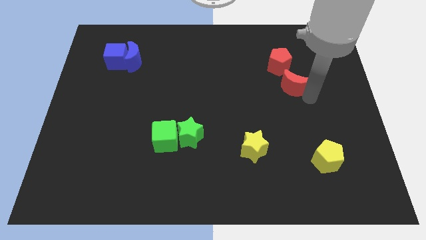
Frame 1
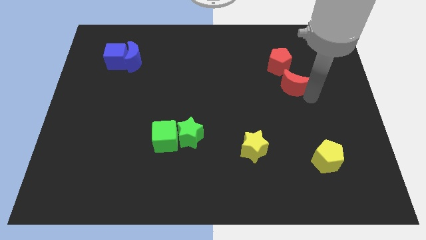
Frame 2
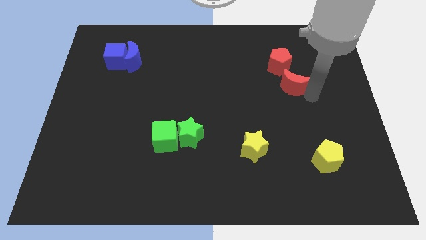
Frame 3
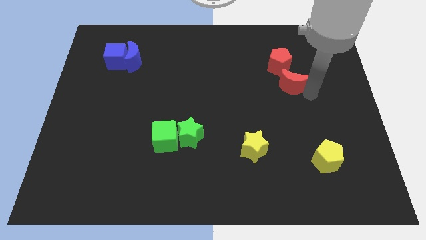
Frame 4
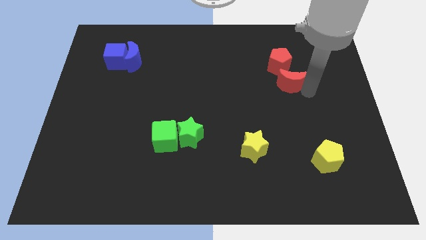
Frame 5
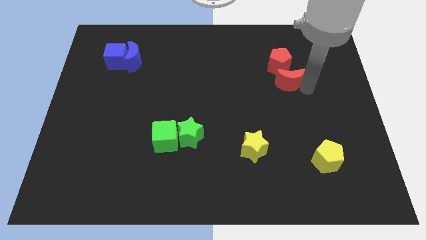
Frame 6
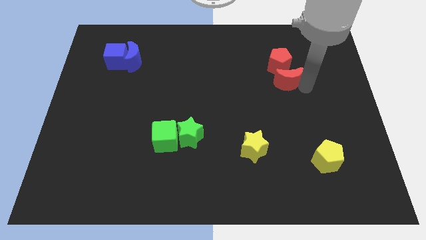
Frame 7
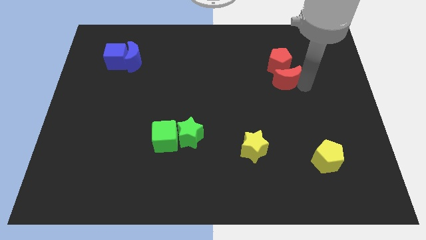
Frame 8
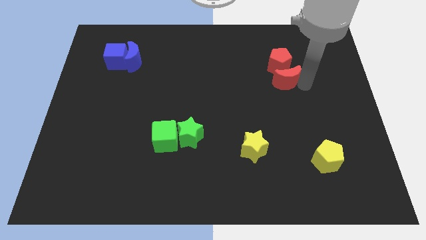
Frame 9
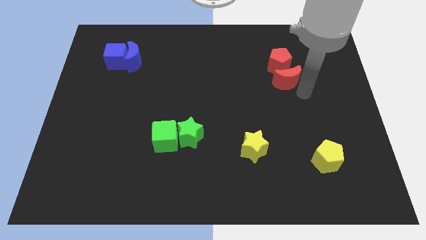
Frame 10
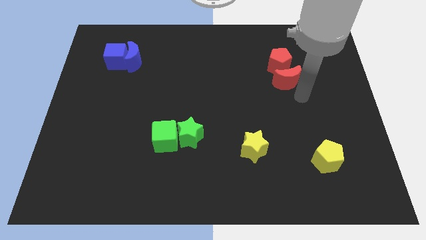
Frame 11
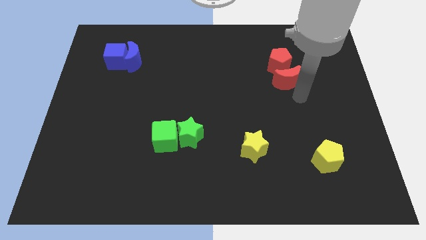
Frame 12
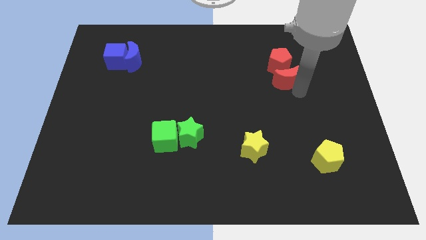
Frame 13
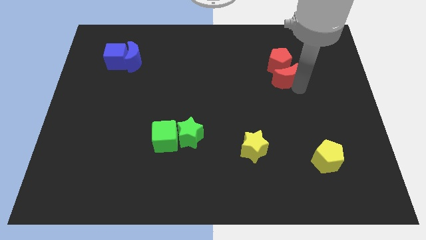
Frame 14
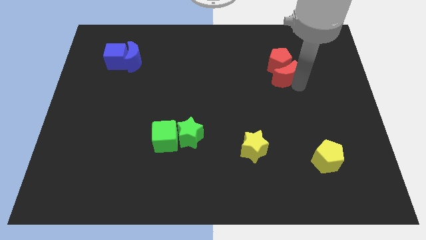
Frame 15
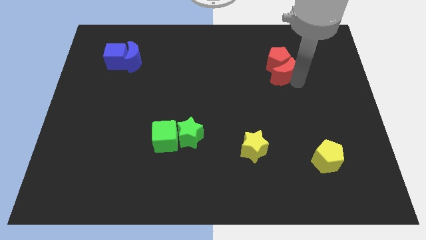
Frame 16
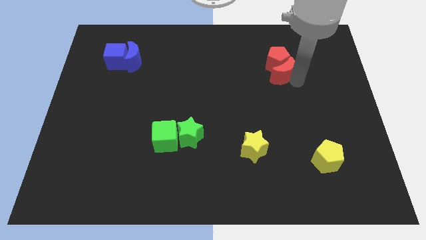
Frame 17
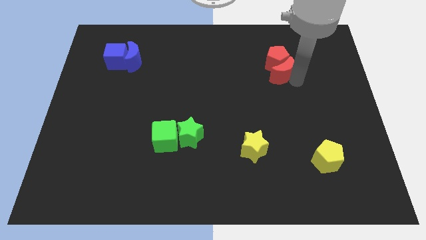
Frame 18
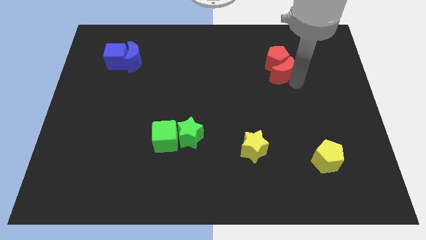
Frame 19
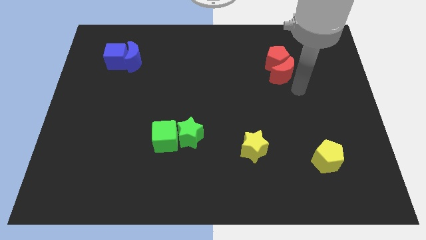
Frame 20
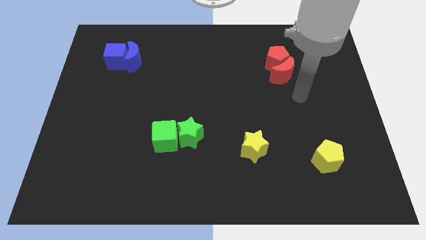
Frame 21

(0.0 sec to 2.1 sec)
push red crescent into red pentagon

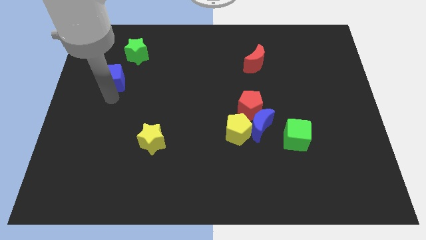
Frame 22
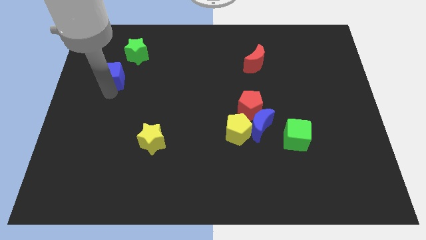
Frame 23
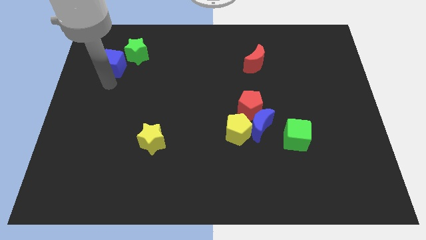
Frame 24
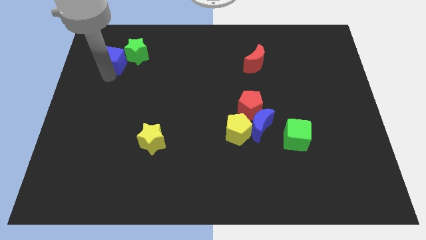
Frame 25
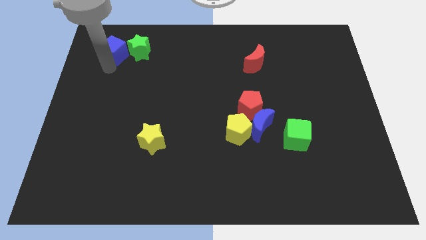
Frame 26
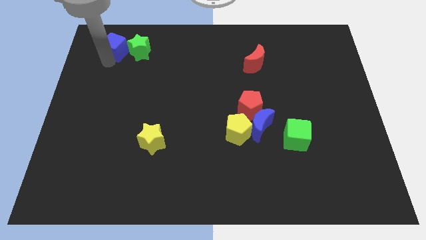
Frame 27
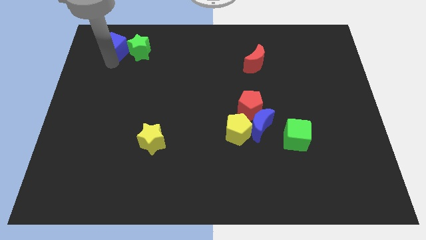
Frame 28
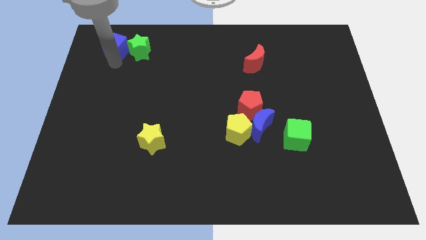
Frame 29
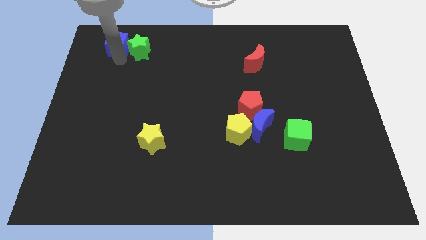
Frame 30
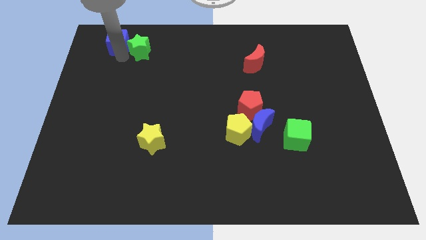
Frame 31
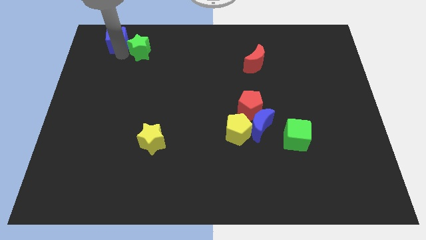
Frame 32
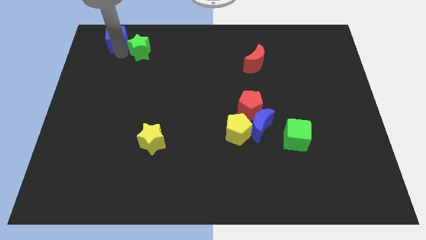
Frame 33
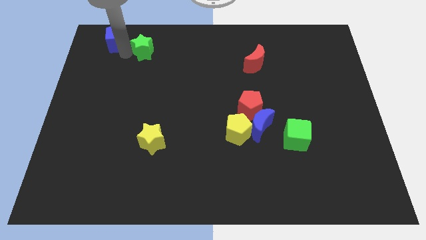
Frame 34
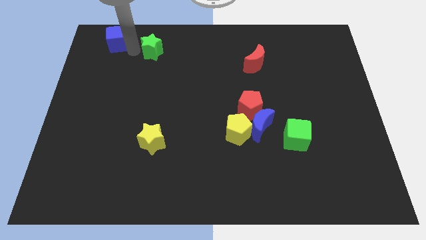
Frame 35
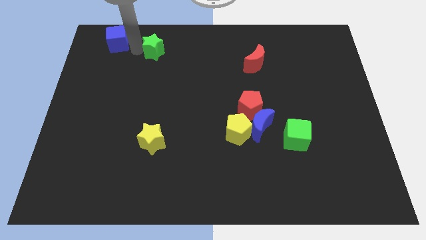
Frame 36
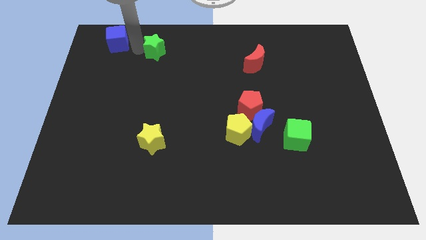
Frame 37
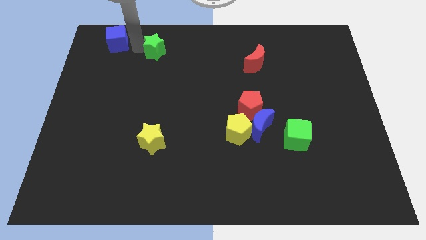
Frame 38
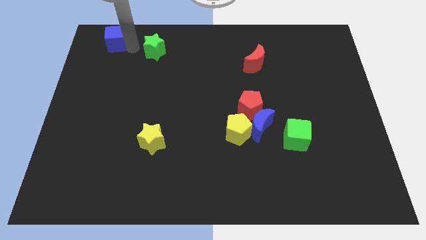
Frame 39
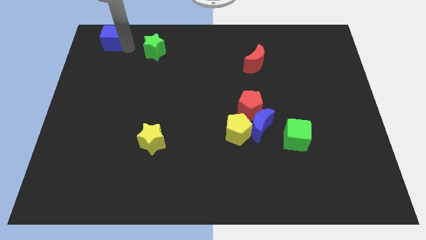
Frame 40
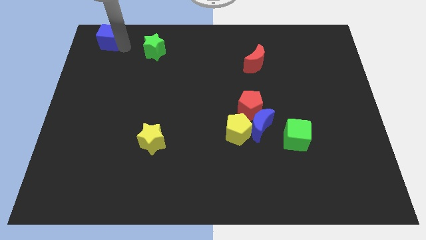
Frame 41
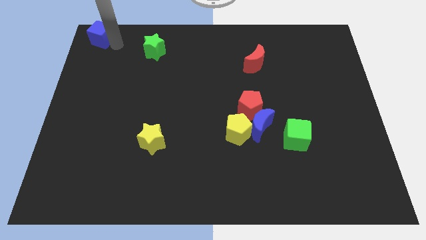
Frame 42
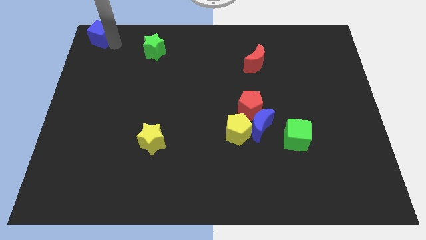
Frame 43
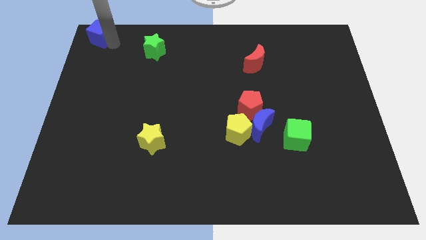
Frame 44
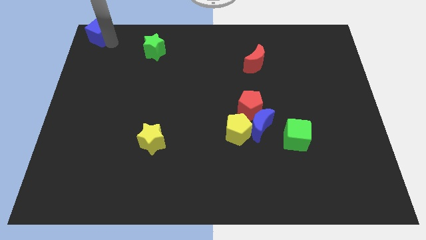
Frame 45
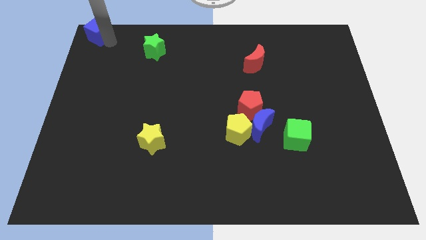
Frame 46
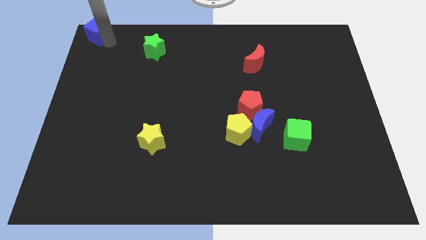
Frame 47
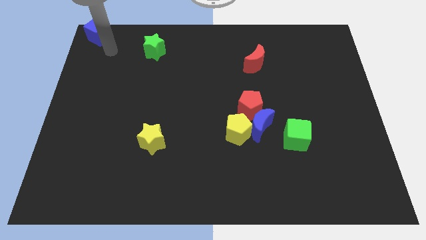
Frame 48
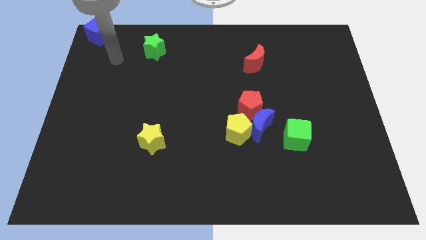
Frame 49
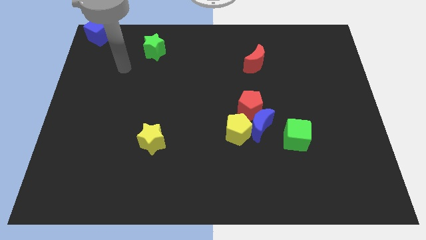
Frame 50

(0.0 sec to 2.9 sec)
move the blue cube to the top left corner of the board

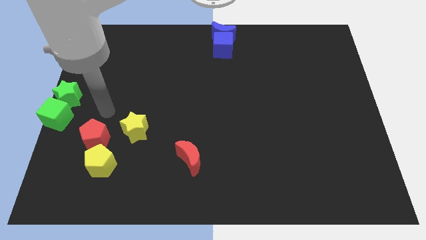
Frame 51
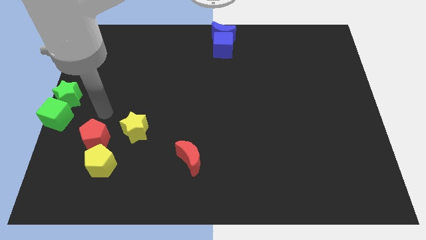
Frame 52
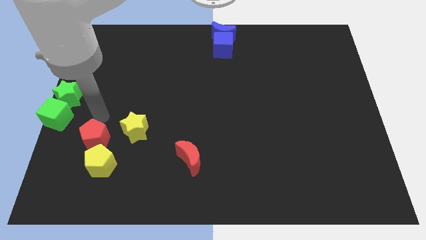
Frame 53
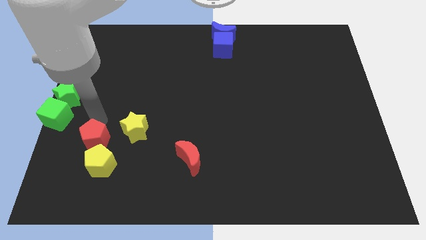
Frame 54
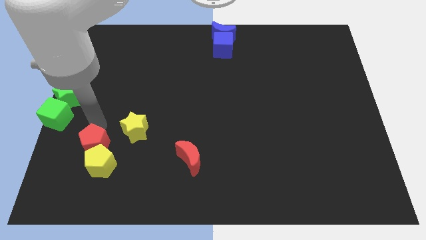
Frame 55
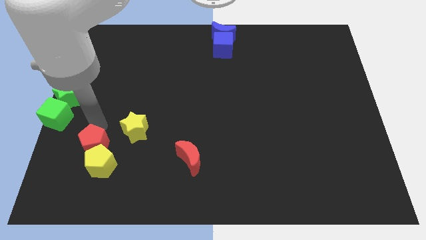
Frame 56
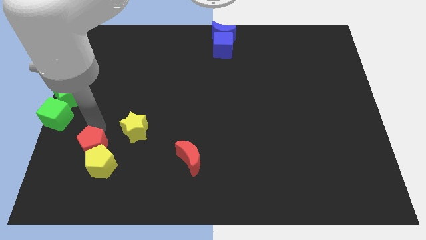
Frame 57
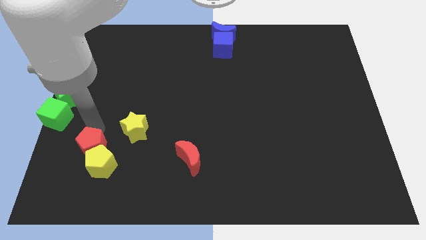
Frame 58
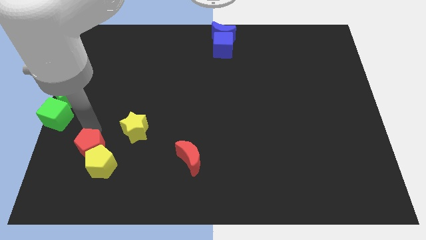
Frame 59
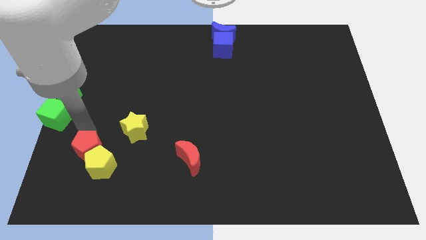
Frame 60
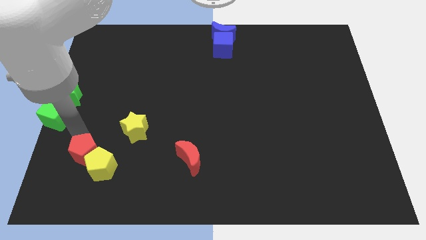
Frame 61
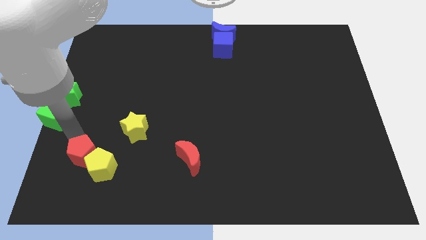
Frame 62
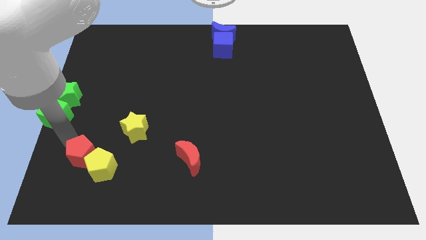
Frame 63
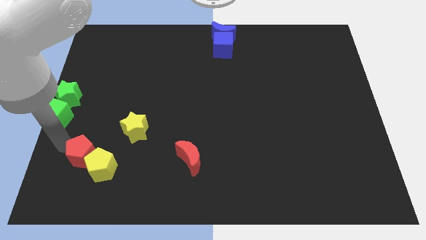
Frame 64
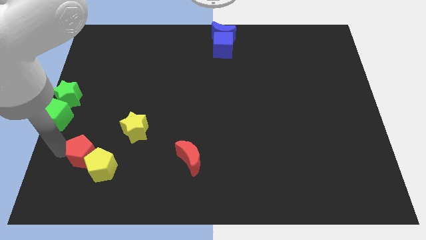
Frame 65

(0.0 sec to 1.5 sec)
push the red pentagon into yellow pentagon

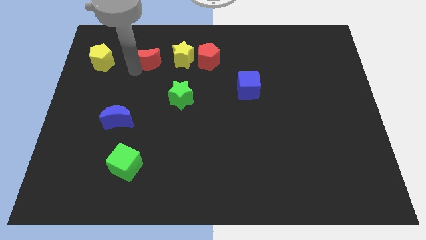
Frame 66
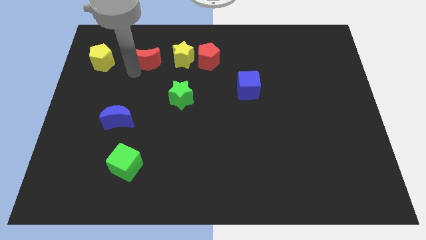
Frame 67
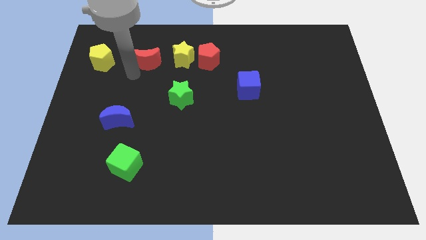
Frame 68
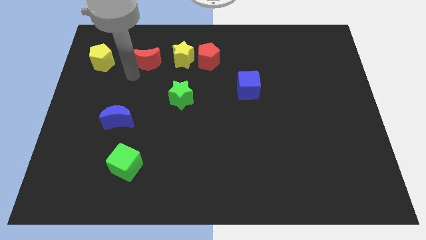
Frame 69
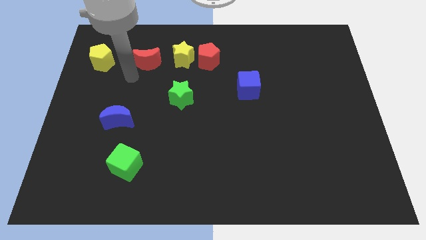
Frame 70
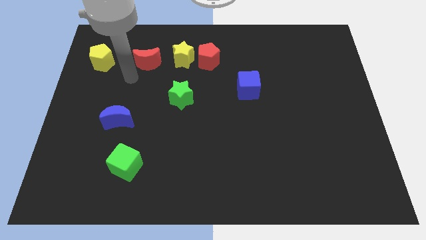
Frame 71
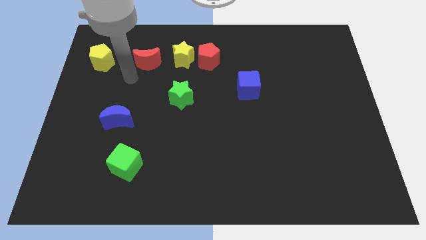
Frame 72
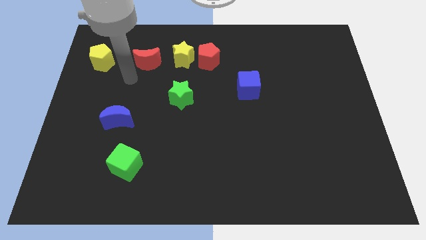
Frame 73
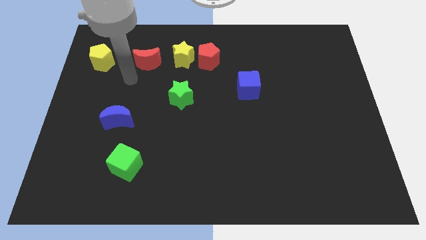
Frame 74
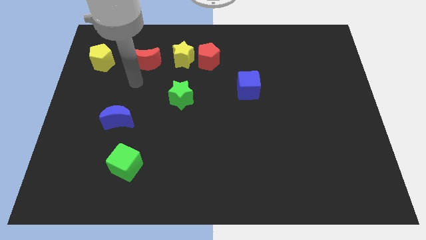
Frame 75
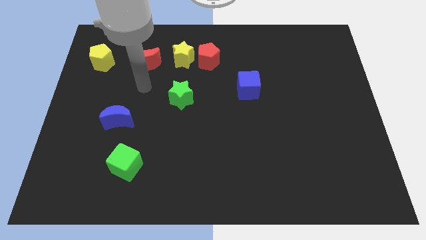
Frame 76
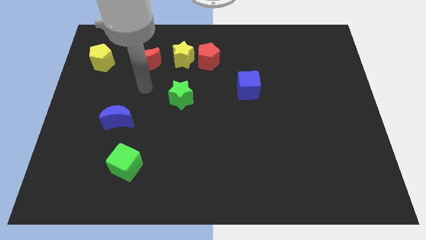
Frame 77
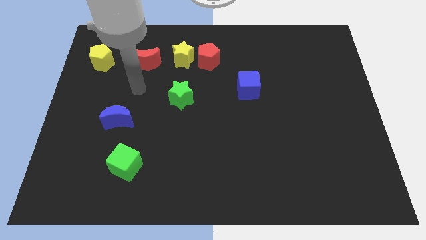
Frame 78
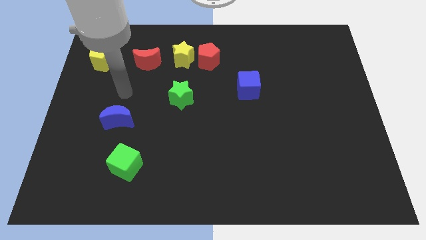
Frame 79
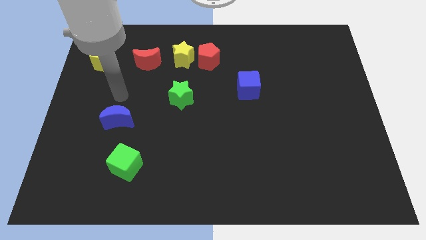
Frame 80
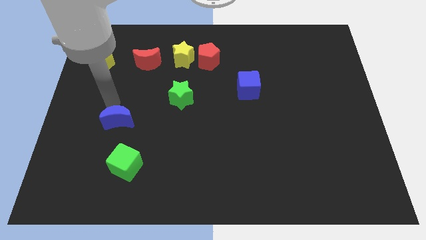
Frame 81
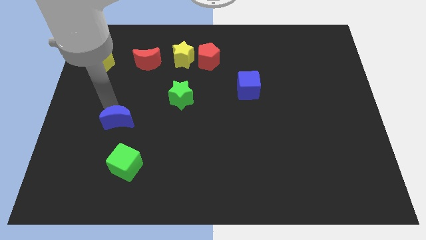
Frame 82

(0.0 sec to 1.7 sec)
move arm near blue moon

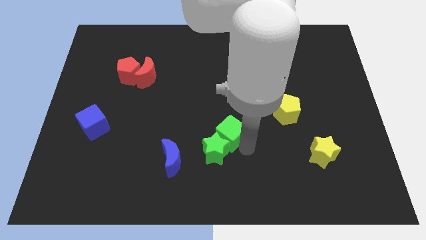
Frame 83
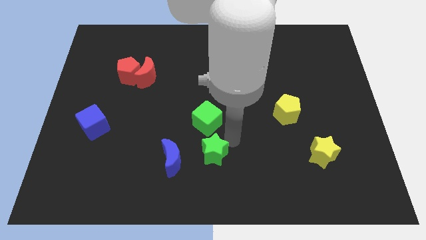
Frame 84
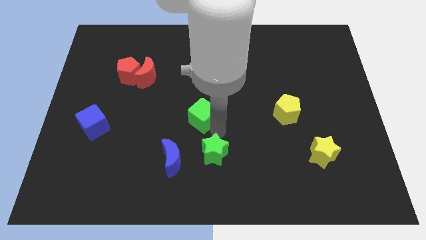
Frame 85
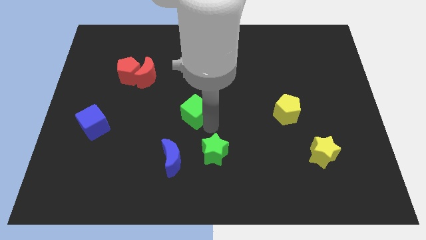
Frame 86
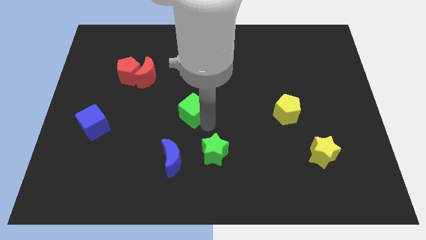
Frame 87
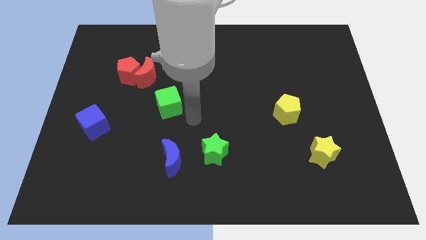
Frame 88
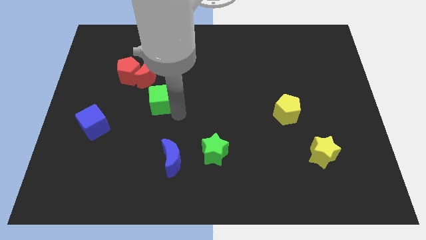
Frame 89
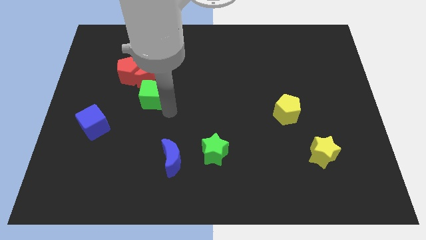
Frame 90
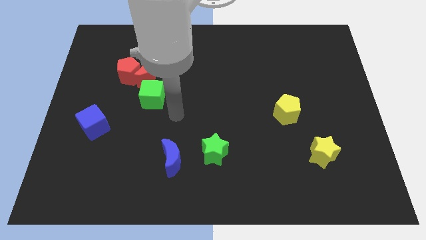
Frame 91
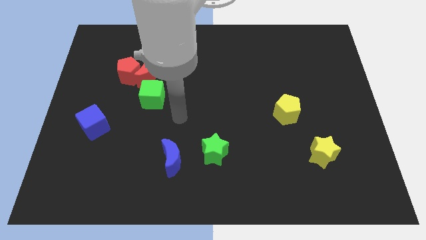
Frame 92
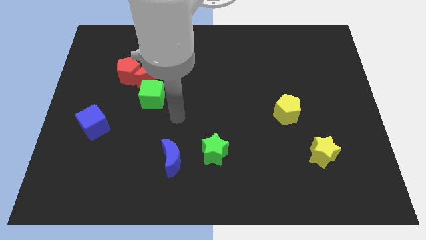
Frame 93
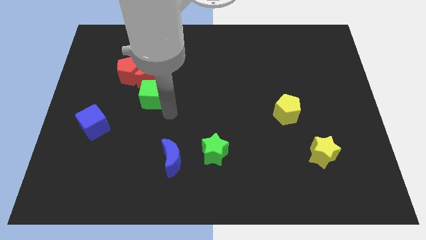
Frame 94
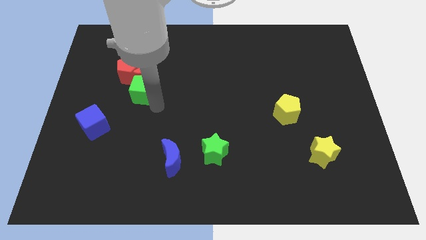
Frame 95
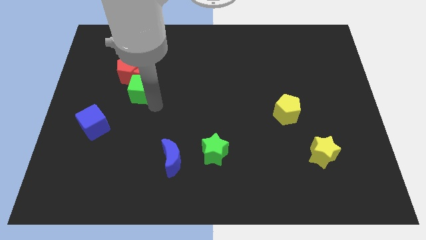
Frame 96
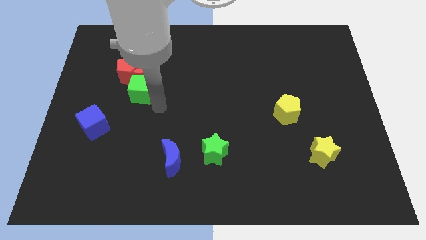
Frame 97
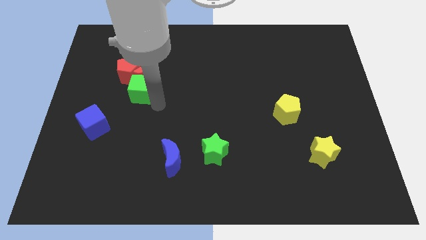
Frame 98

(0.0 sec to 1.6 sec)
place the green cube below the red moon
